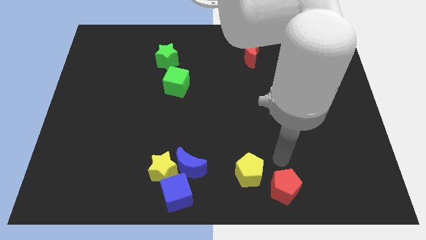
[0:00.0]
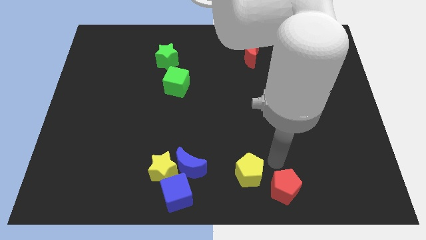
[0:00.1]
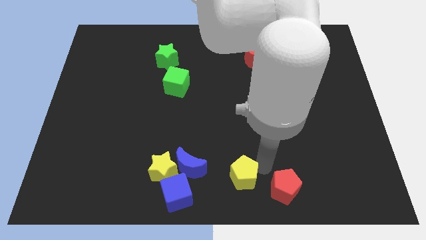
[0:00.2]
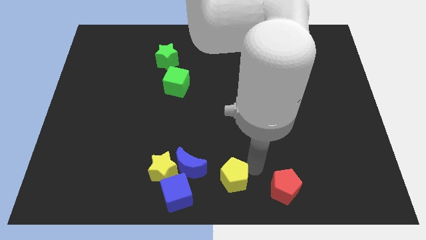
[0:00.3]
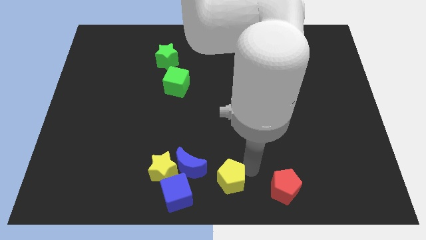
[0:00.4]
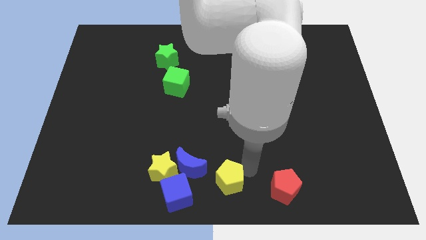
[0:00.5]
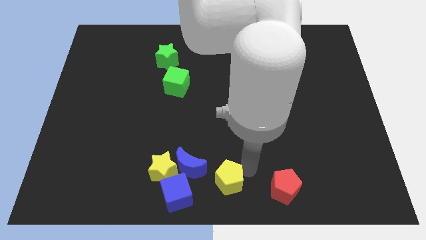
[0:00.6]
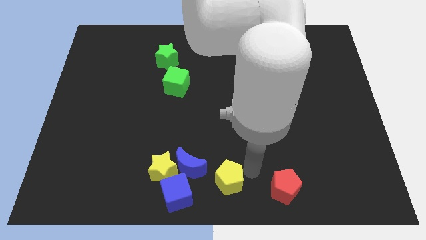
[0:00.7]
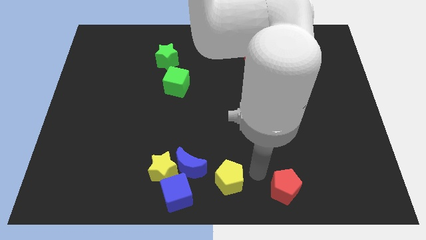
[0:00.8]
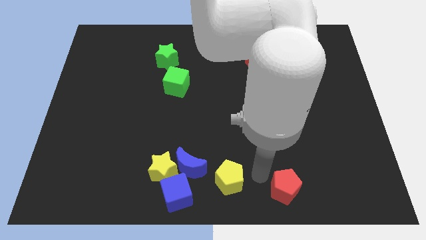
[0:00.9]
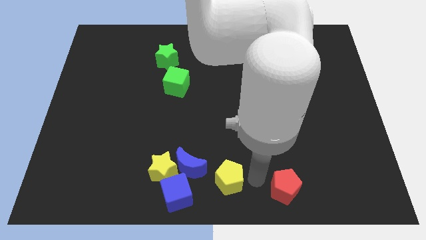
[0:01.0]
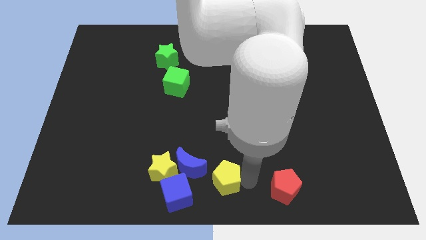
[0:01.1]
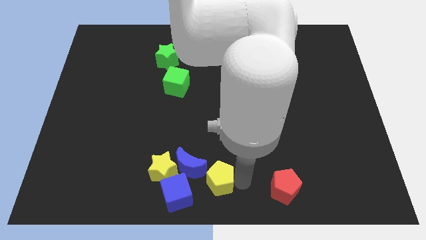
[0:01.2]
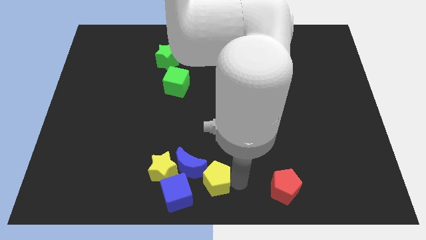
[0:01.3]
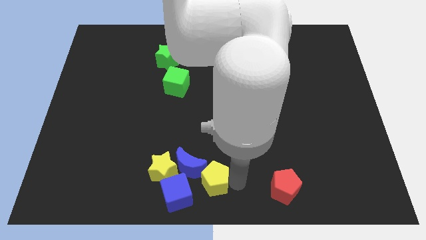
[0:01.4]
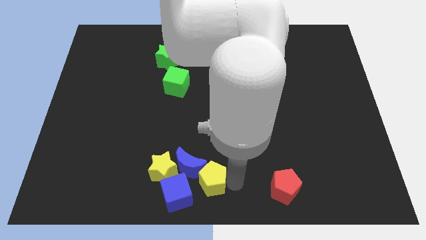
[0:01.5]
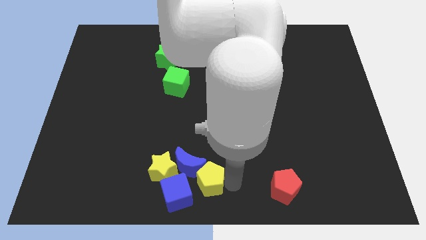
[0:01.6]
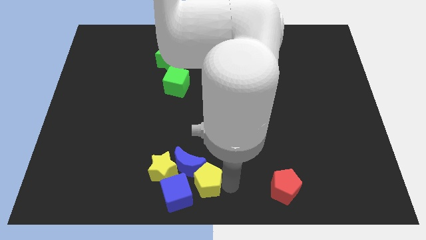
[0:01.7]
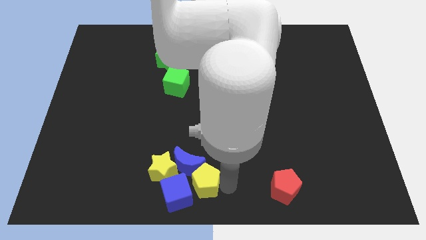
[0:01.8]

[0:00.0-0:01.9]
push the yellow pentagon into blue crescent

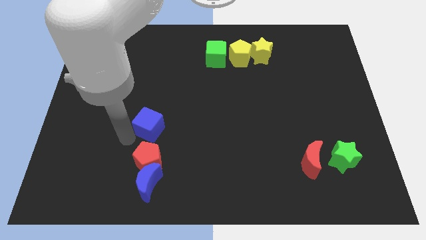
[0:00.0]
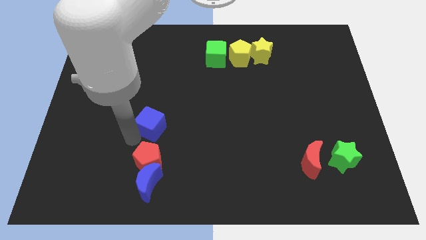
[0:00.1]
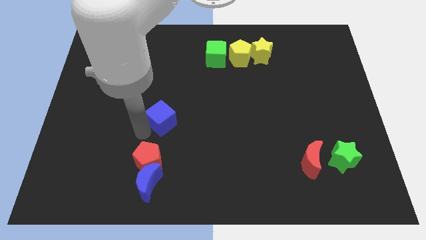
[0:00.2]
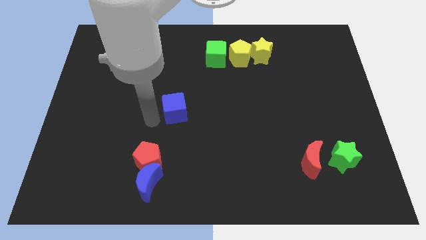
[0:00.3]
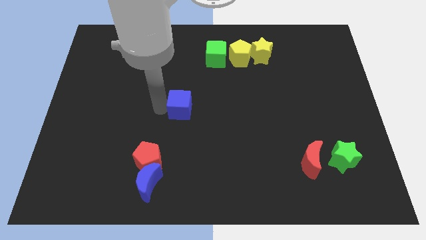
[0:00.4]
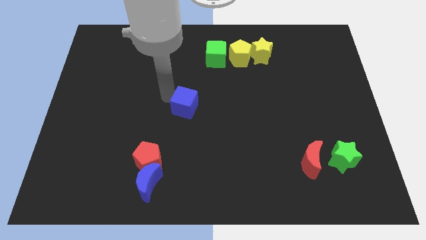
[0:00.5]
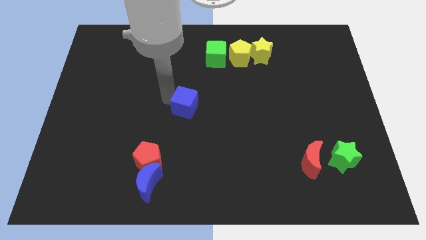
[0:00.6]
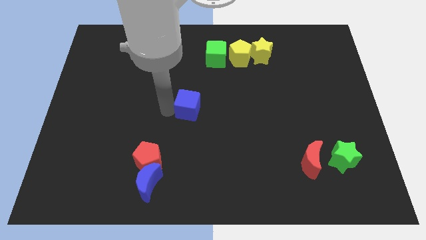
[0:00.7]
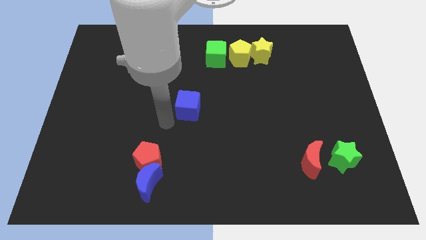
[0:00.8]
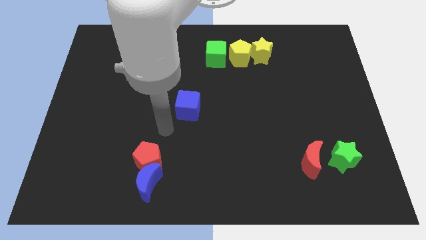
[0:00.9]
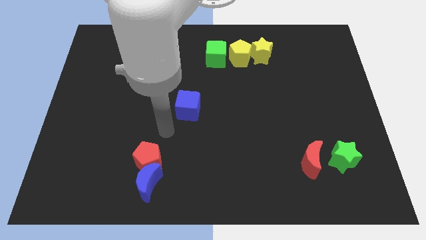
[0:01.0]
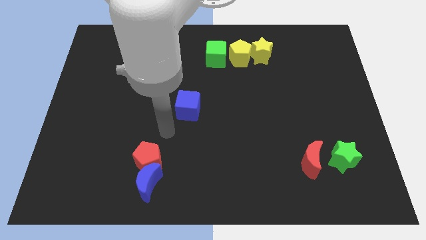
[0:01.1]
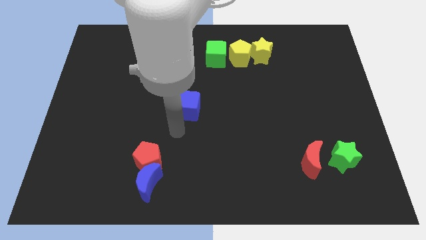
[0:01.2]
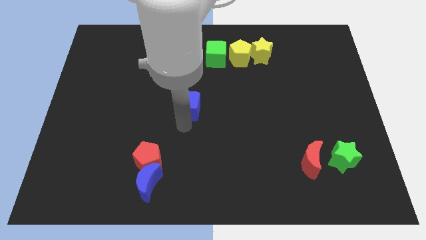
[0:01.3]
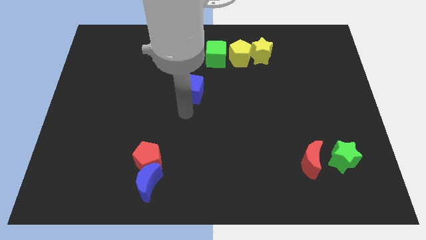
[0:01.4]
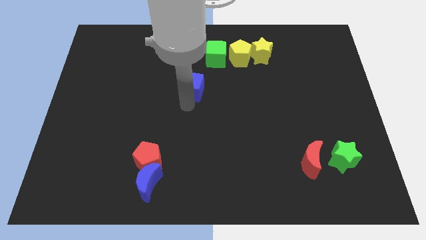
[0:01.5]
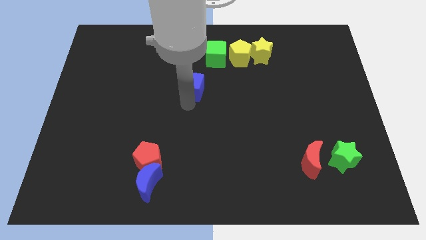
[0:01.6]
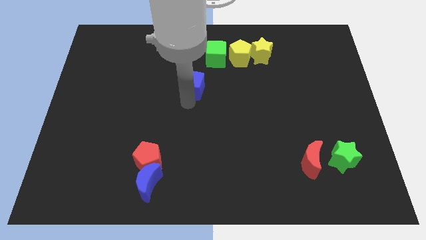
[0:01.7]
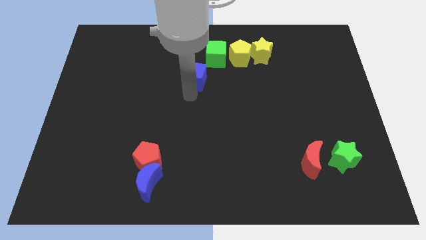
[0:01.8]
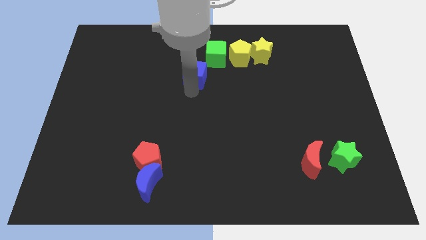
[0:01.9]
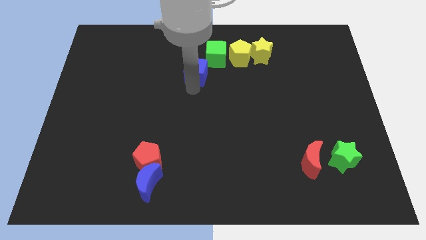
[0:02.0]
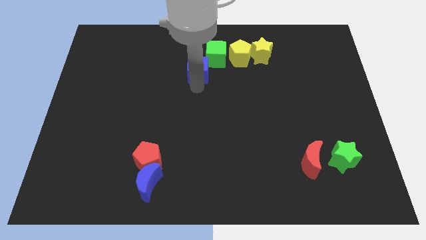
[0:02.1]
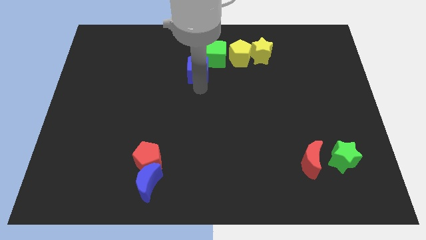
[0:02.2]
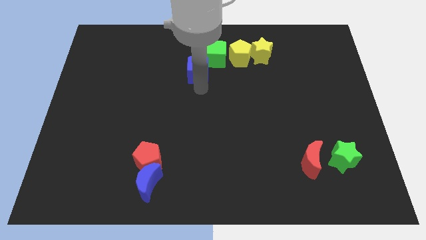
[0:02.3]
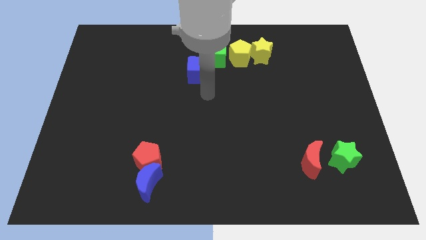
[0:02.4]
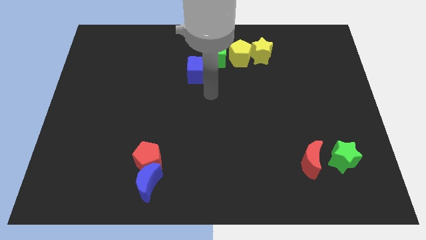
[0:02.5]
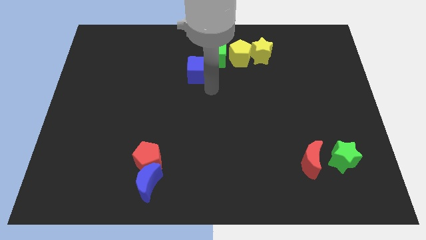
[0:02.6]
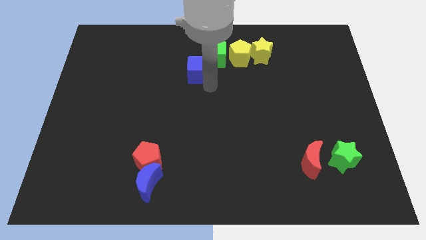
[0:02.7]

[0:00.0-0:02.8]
push blue cube bottom left to the green cube

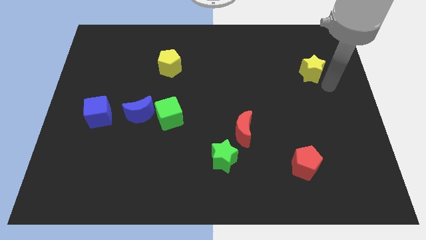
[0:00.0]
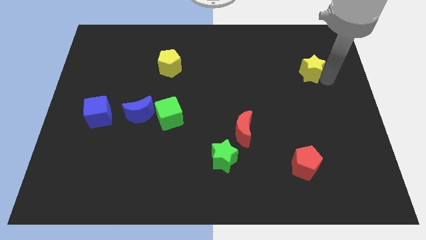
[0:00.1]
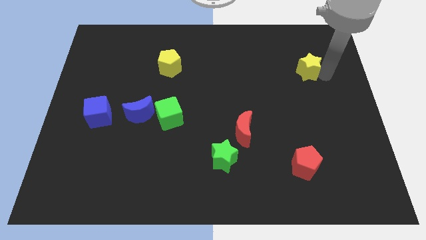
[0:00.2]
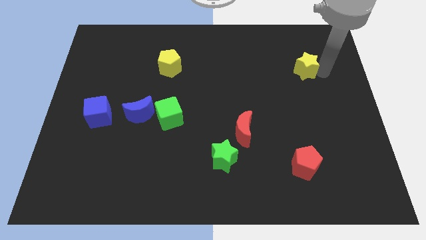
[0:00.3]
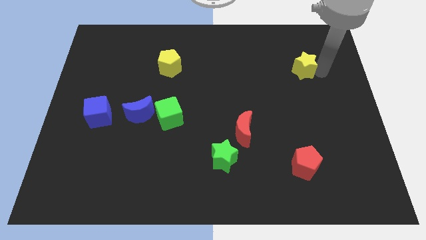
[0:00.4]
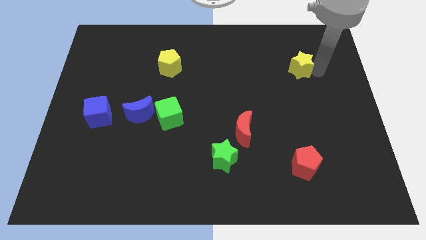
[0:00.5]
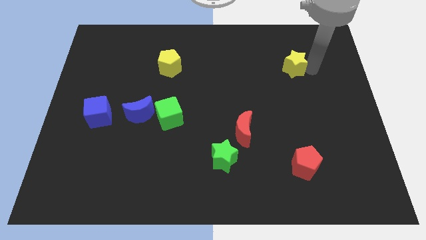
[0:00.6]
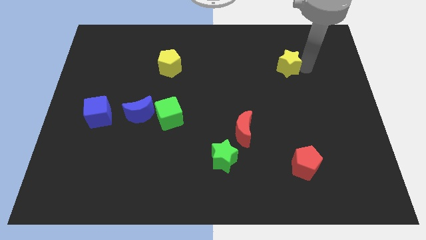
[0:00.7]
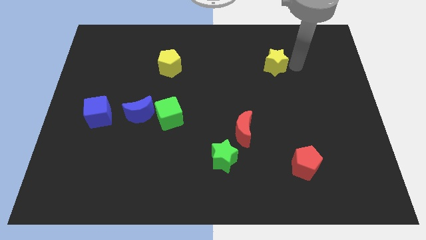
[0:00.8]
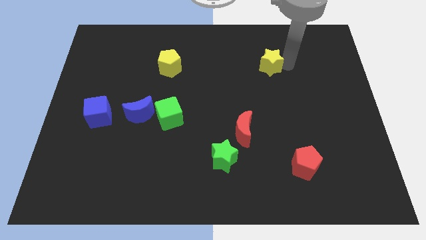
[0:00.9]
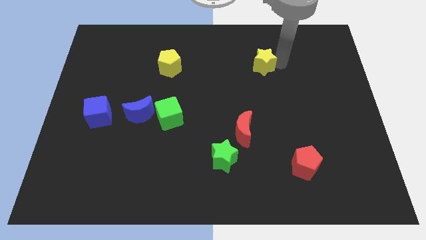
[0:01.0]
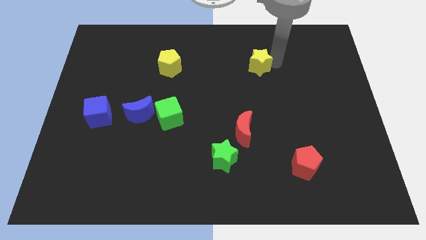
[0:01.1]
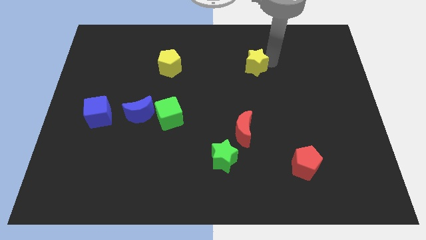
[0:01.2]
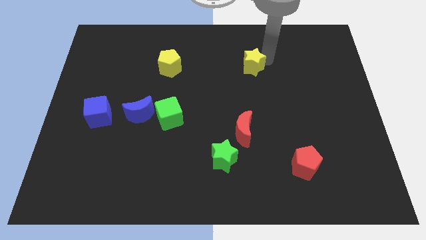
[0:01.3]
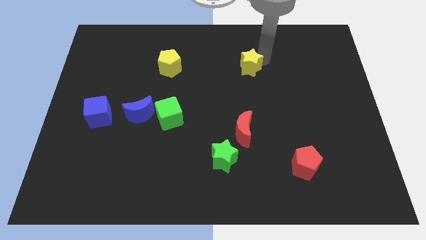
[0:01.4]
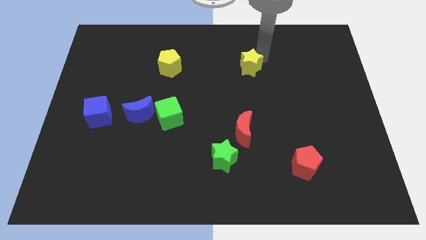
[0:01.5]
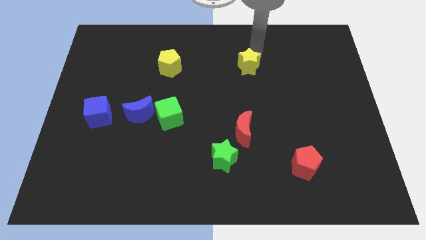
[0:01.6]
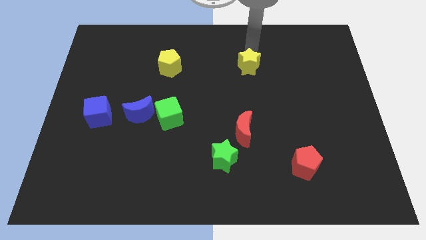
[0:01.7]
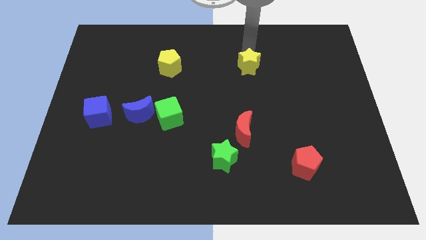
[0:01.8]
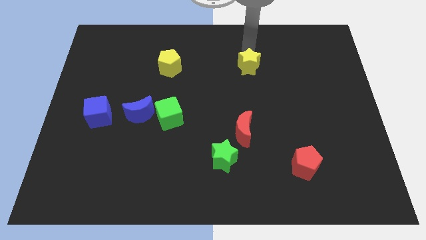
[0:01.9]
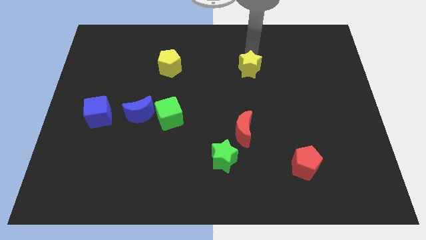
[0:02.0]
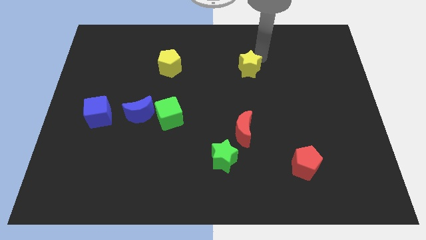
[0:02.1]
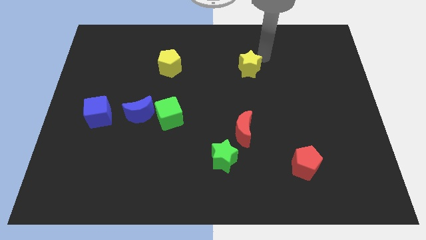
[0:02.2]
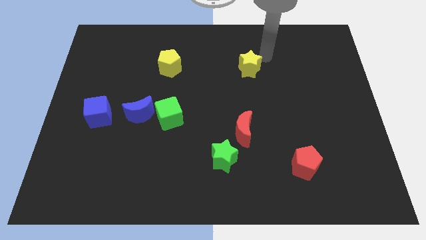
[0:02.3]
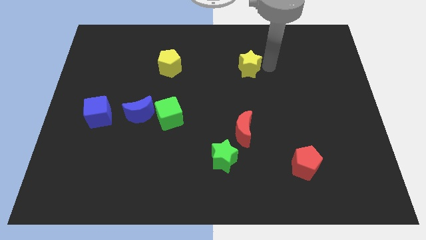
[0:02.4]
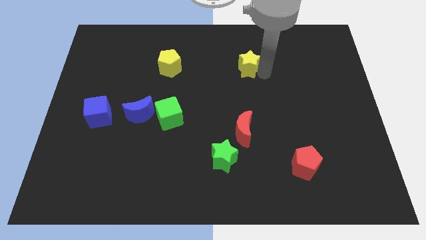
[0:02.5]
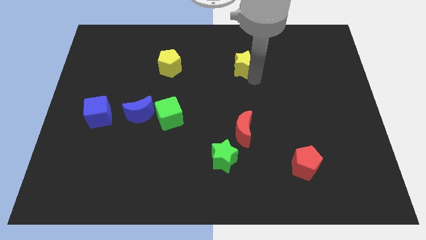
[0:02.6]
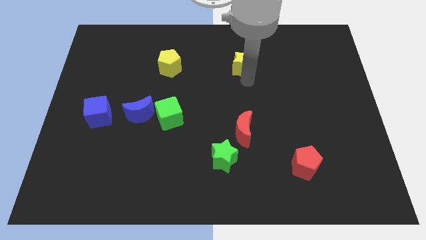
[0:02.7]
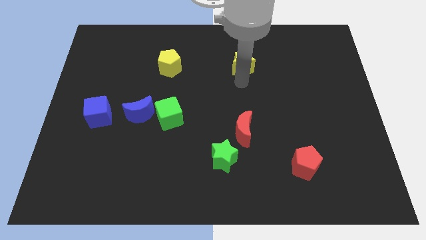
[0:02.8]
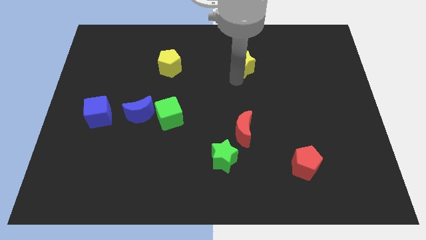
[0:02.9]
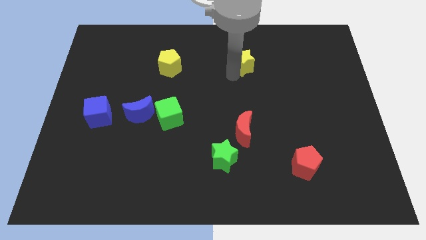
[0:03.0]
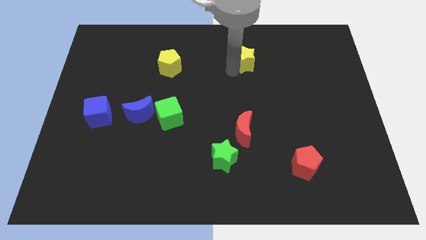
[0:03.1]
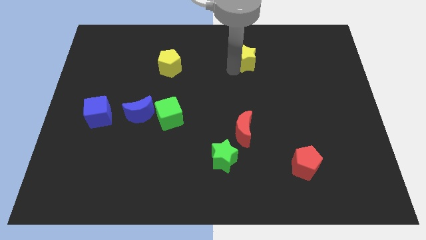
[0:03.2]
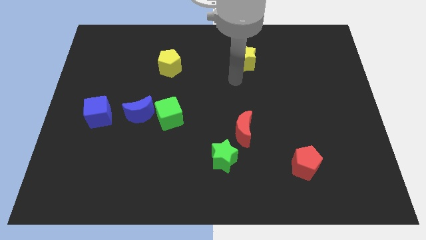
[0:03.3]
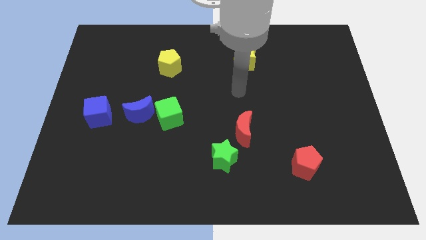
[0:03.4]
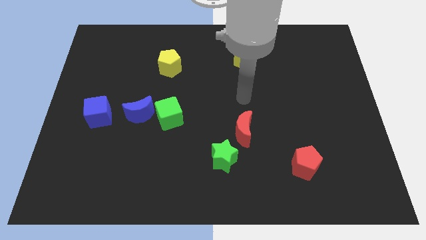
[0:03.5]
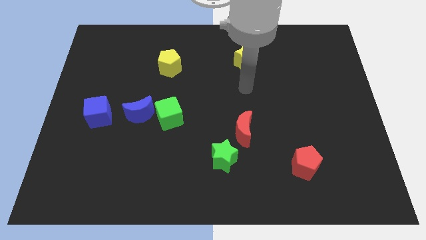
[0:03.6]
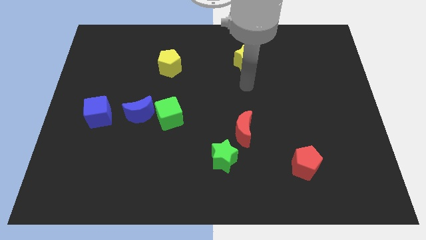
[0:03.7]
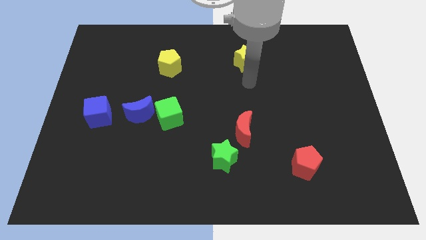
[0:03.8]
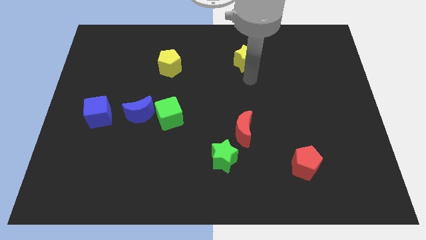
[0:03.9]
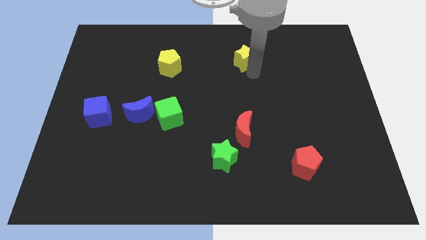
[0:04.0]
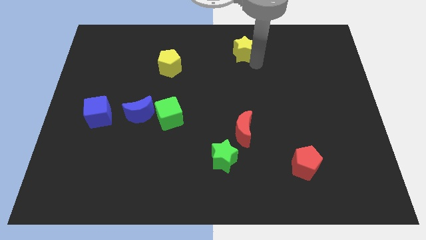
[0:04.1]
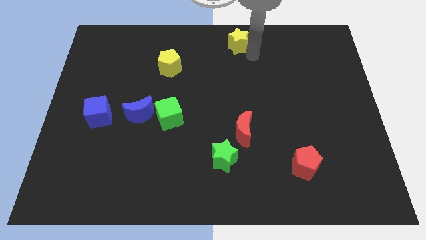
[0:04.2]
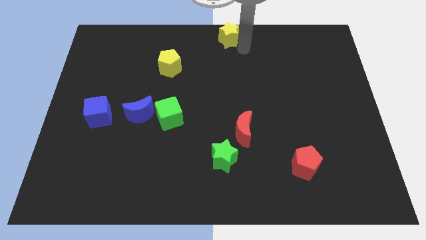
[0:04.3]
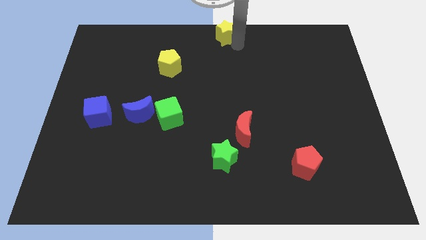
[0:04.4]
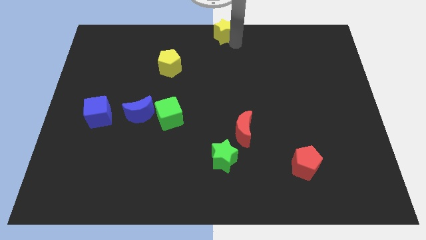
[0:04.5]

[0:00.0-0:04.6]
push the yellow star to the top center
